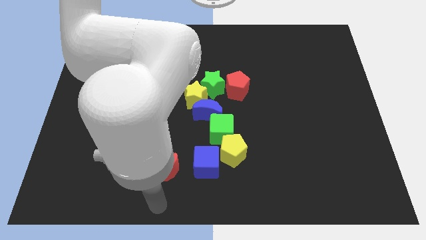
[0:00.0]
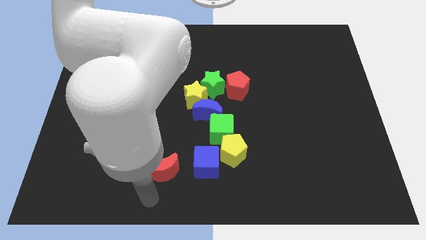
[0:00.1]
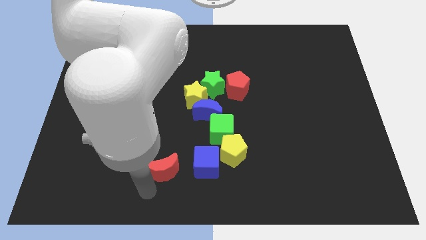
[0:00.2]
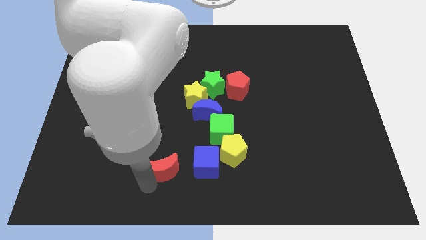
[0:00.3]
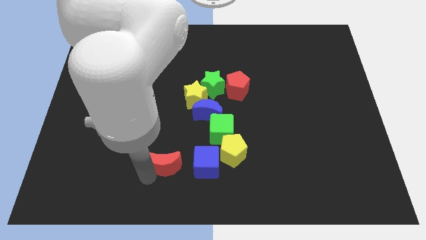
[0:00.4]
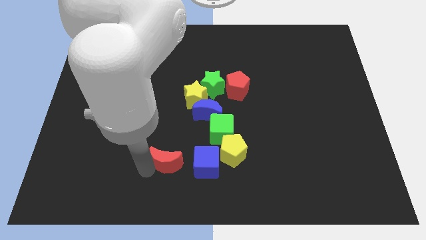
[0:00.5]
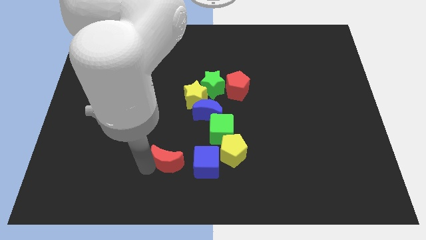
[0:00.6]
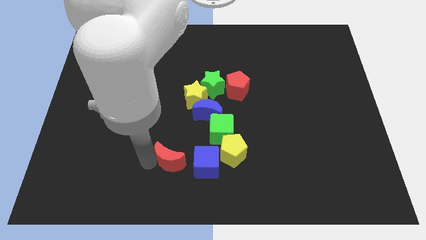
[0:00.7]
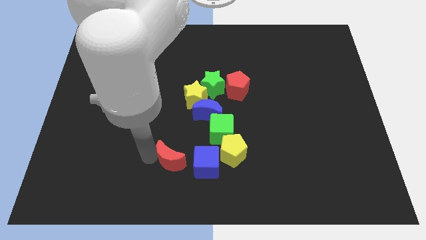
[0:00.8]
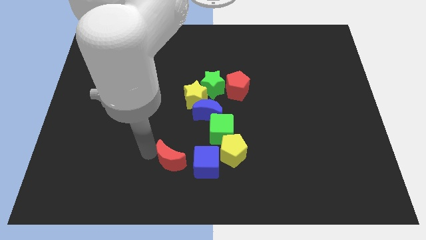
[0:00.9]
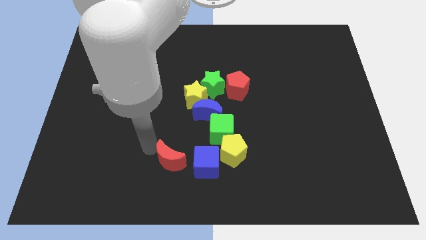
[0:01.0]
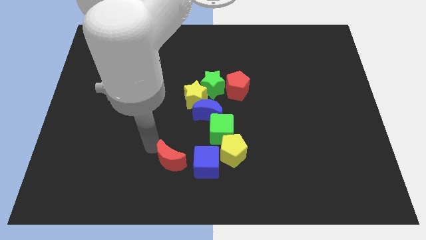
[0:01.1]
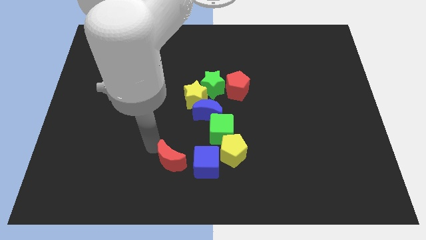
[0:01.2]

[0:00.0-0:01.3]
slide the red crescent slightly towards up

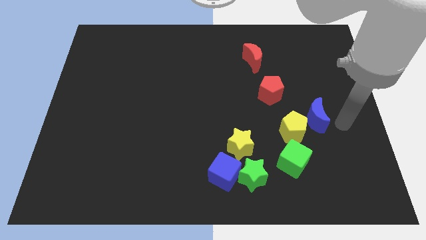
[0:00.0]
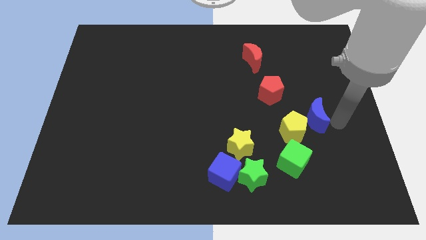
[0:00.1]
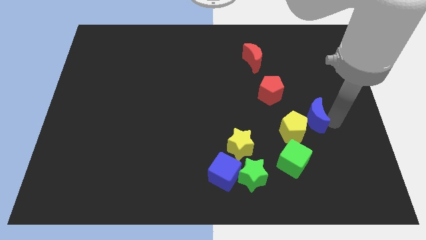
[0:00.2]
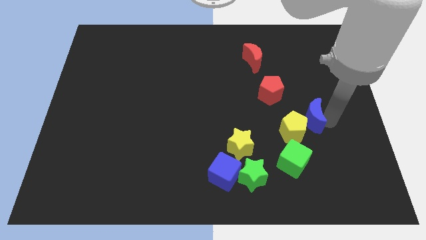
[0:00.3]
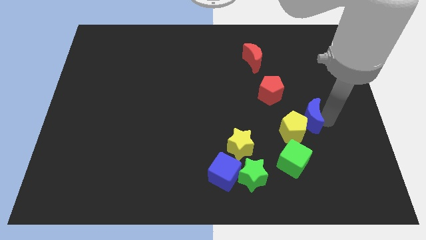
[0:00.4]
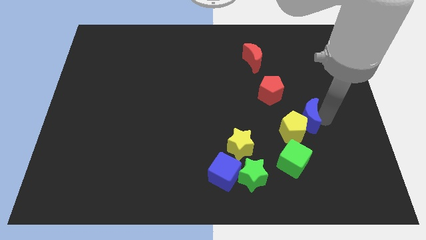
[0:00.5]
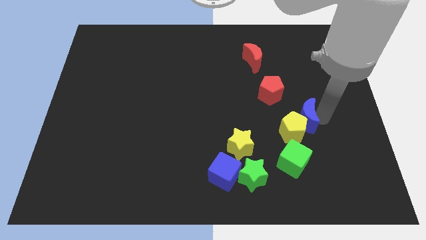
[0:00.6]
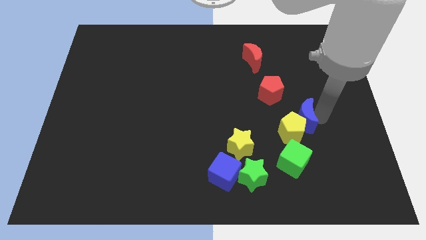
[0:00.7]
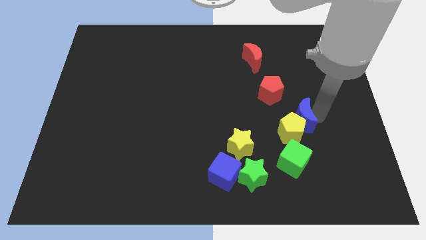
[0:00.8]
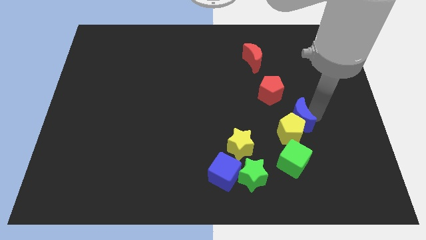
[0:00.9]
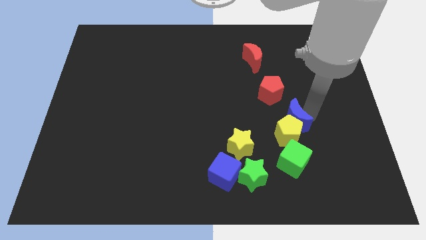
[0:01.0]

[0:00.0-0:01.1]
push the blue crescent into the yellow pentagon

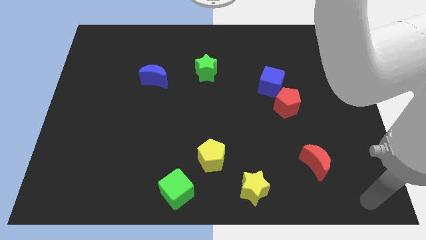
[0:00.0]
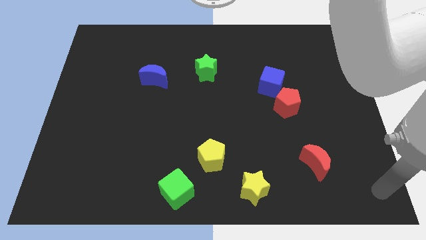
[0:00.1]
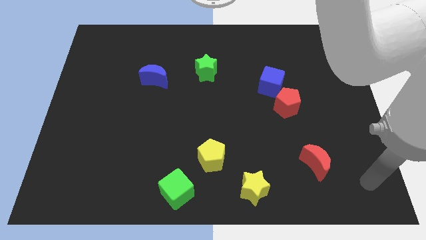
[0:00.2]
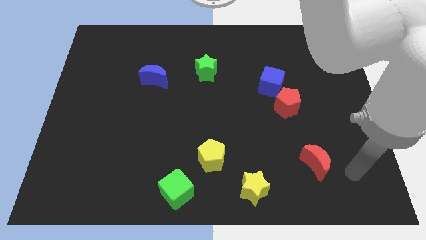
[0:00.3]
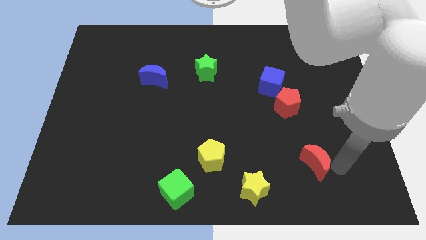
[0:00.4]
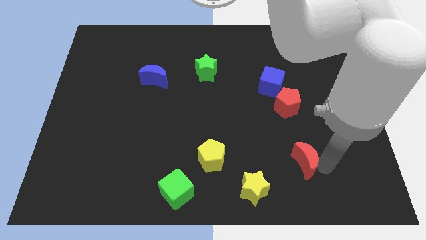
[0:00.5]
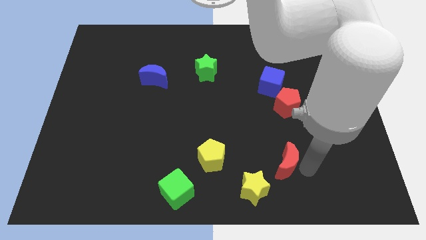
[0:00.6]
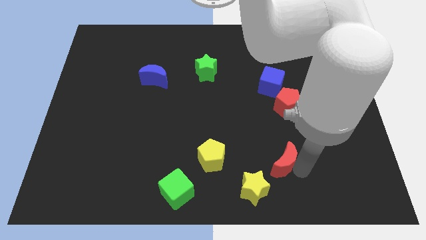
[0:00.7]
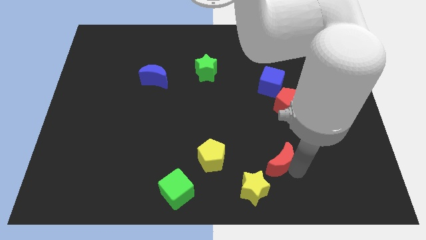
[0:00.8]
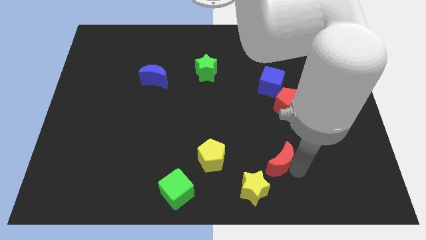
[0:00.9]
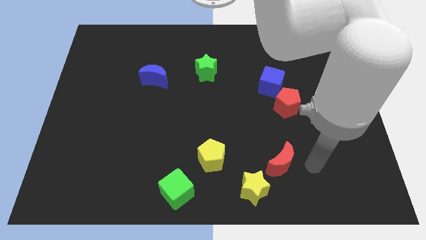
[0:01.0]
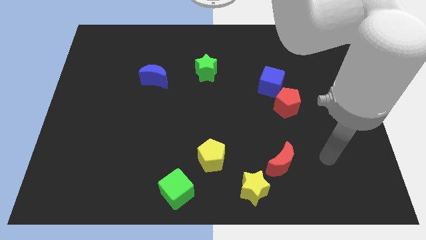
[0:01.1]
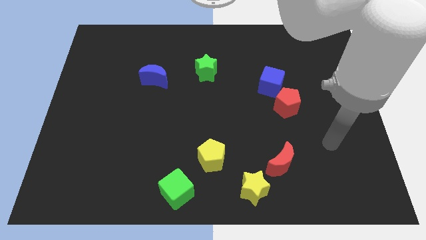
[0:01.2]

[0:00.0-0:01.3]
place the red moon diagonally top right to yellow star

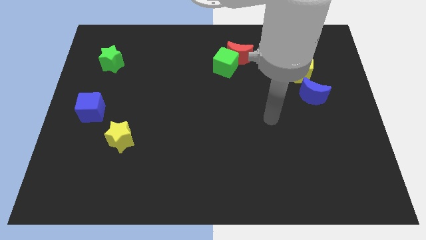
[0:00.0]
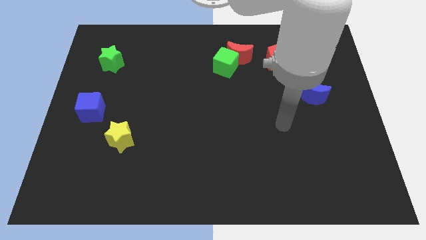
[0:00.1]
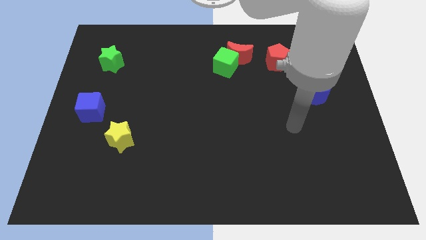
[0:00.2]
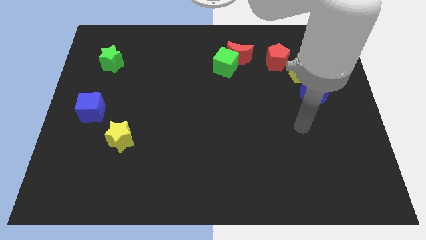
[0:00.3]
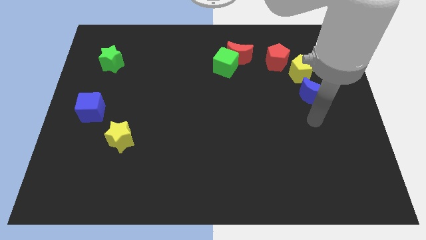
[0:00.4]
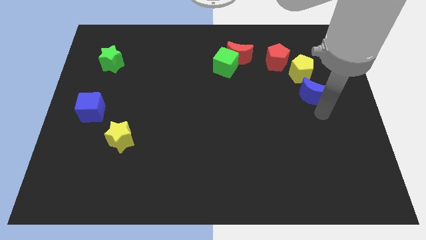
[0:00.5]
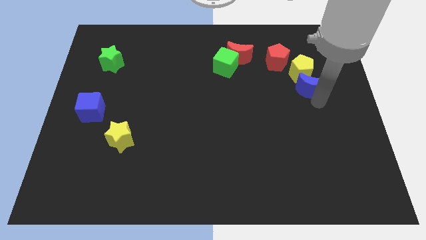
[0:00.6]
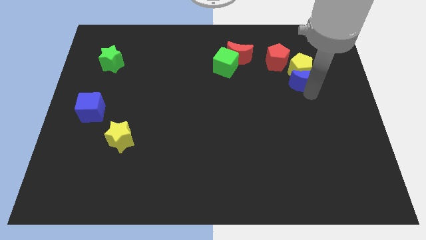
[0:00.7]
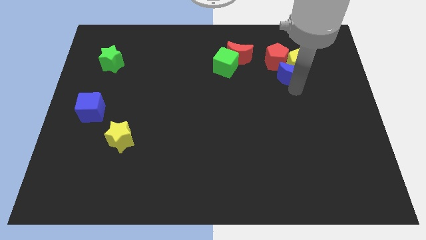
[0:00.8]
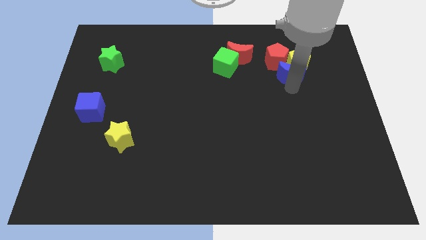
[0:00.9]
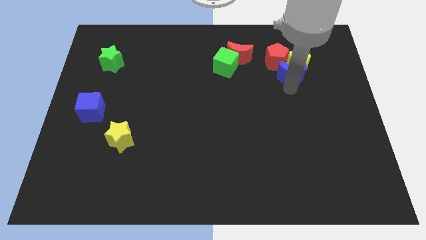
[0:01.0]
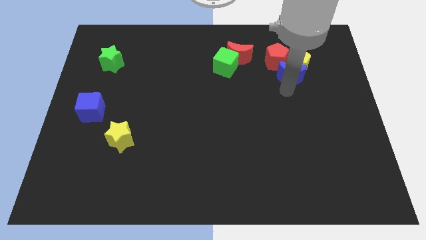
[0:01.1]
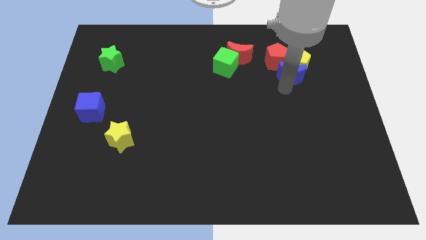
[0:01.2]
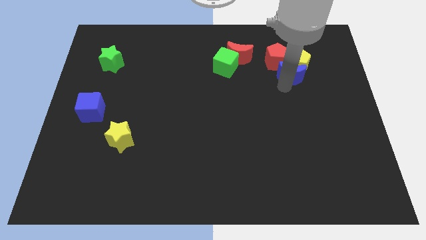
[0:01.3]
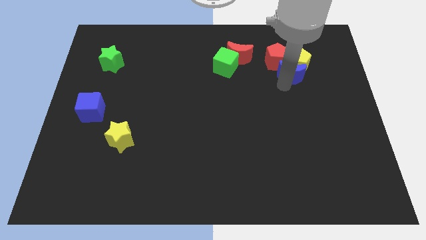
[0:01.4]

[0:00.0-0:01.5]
push the blue moon into the yellow and red pentagon

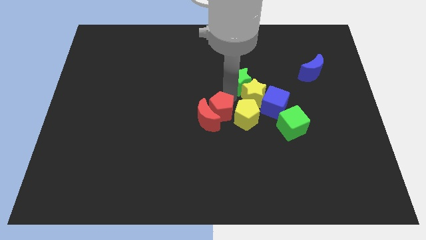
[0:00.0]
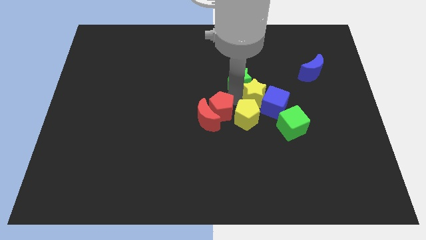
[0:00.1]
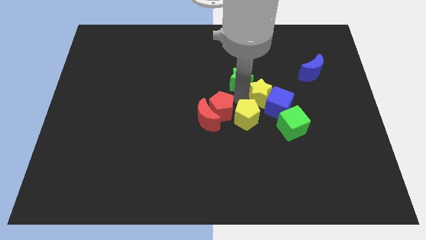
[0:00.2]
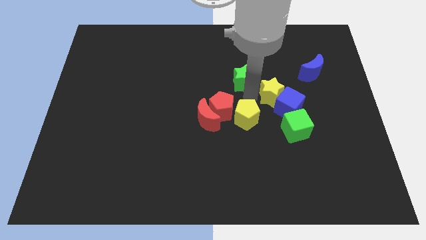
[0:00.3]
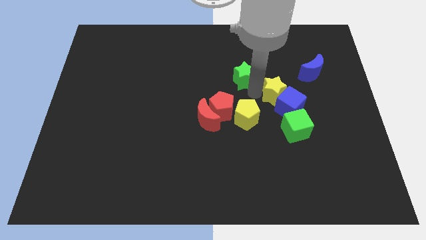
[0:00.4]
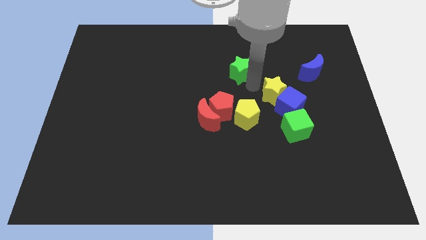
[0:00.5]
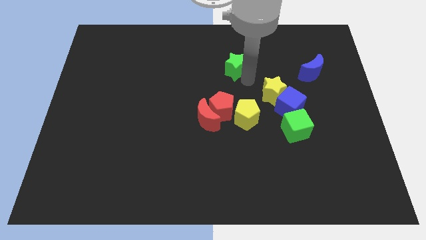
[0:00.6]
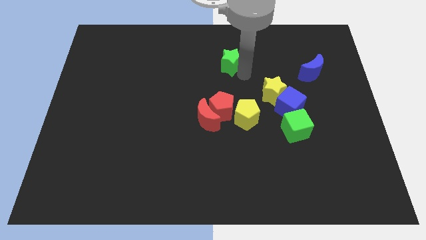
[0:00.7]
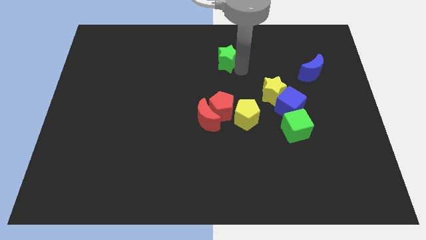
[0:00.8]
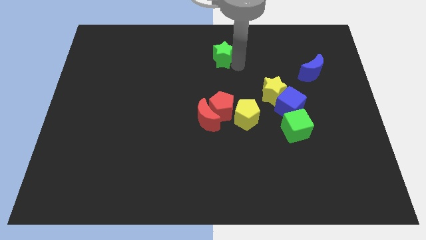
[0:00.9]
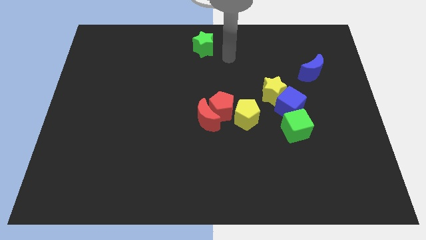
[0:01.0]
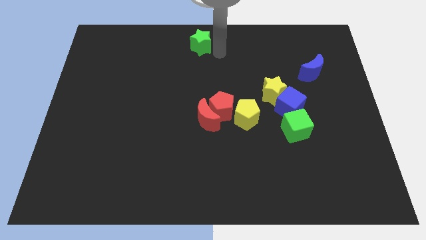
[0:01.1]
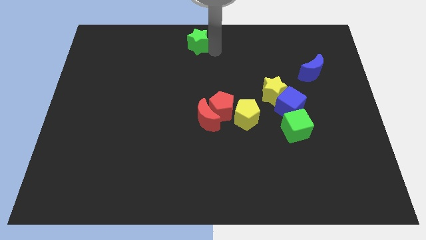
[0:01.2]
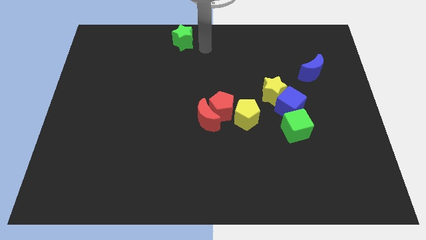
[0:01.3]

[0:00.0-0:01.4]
move the green star to the top center of the board

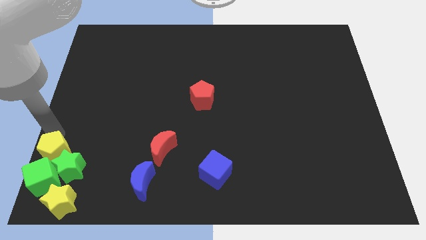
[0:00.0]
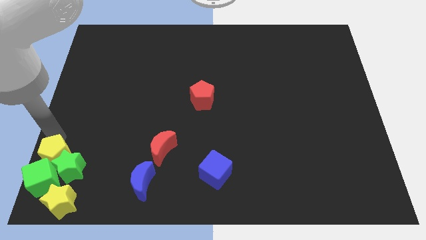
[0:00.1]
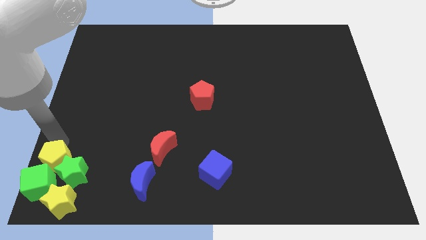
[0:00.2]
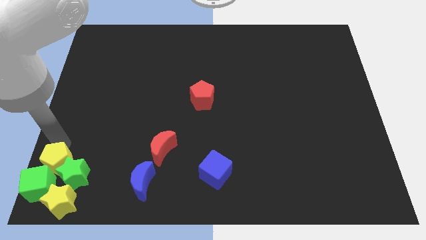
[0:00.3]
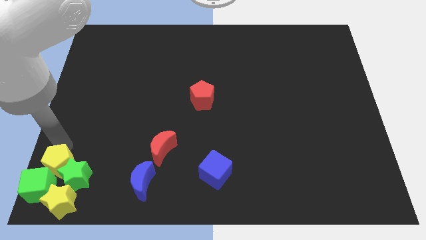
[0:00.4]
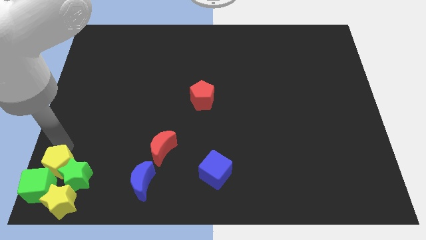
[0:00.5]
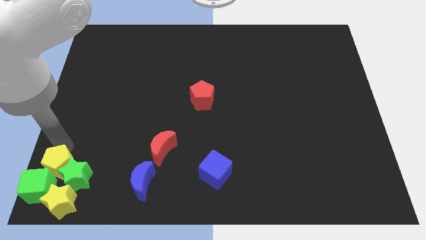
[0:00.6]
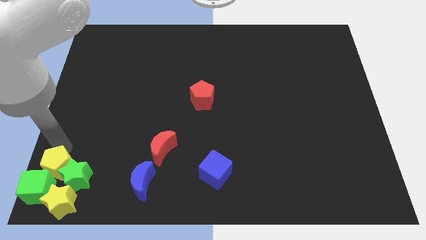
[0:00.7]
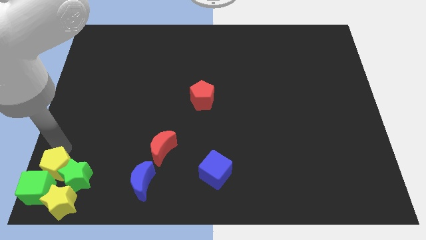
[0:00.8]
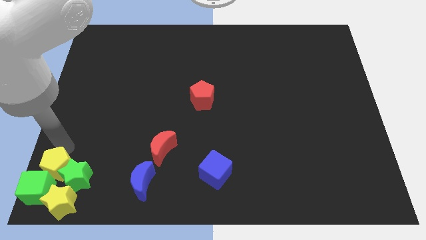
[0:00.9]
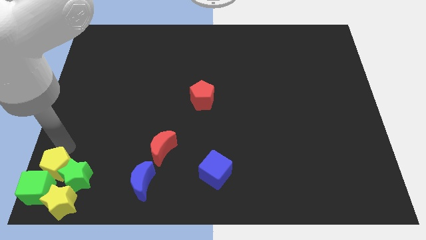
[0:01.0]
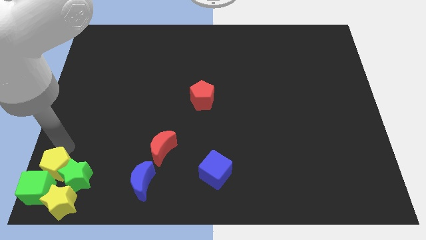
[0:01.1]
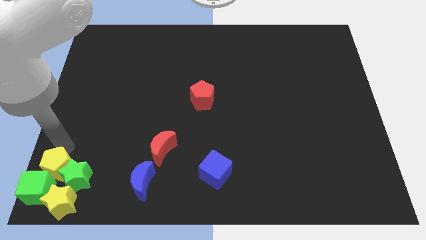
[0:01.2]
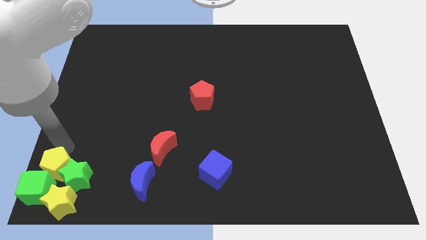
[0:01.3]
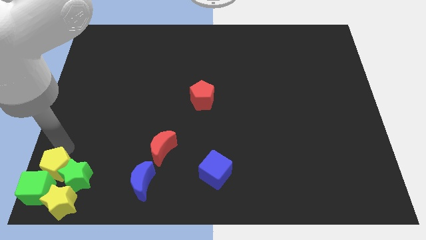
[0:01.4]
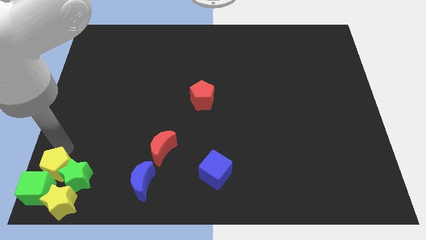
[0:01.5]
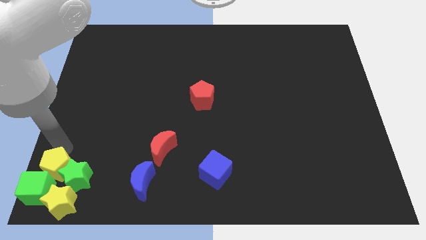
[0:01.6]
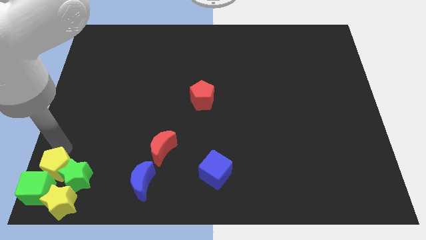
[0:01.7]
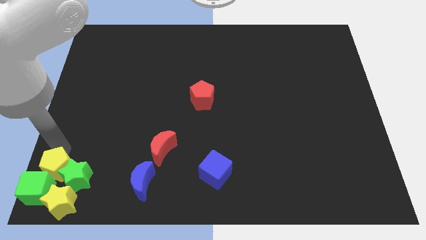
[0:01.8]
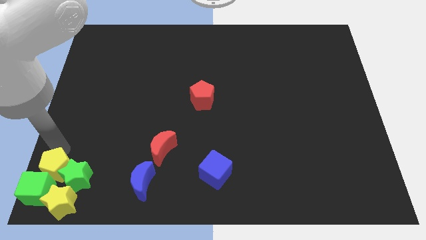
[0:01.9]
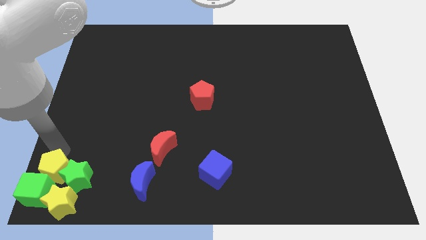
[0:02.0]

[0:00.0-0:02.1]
group up the yellow pentagon green blocks and yellow star at the bottom left side of the table
